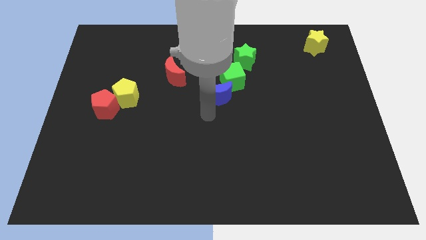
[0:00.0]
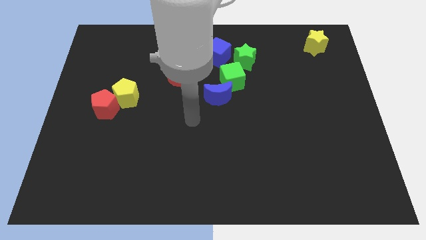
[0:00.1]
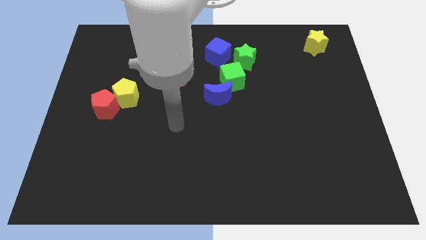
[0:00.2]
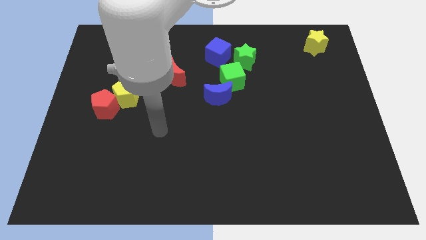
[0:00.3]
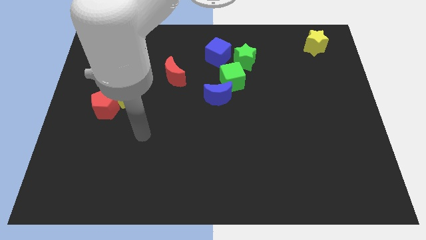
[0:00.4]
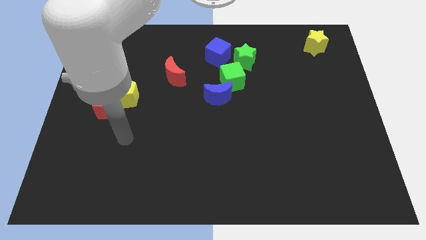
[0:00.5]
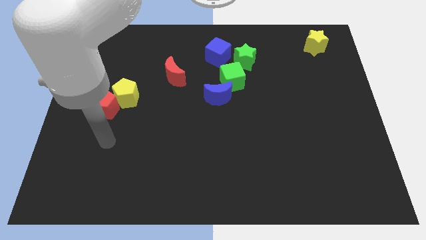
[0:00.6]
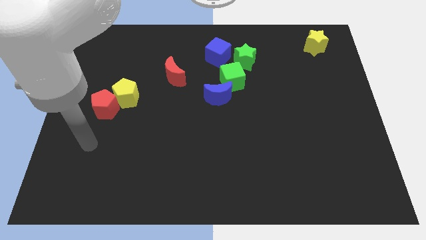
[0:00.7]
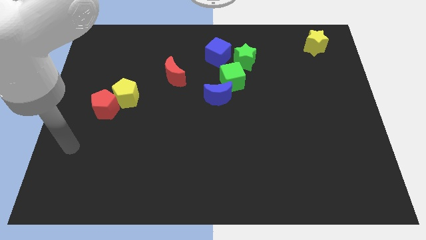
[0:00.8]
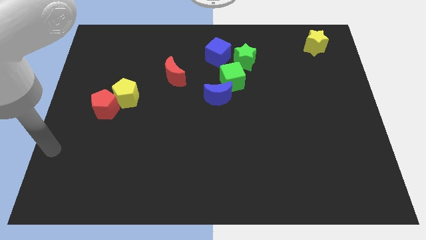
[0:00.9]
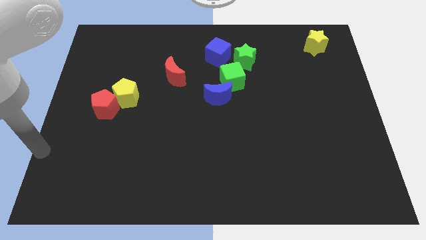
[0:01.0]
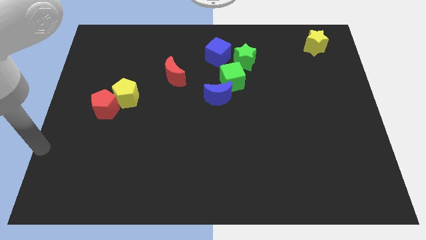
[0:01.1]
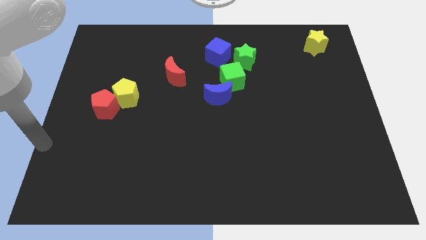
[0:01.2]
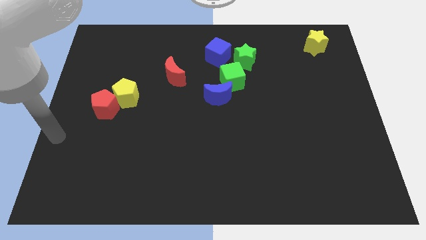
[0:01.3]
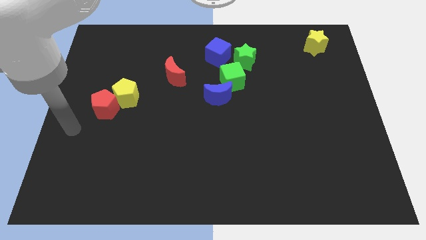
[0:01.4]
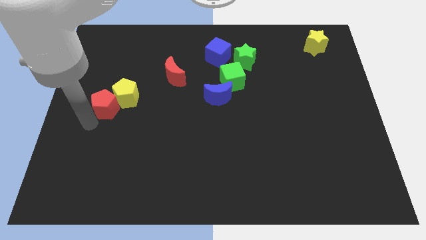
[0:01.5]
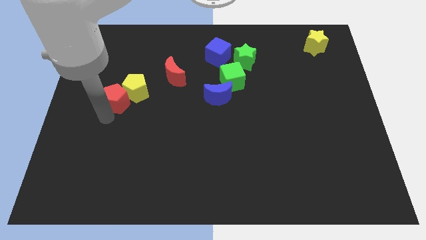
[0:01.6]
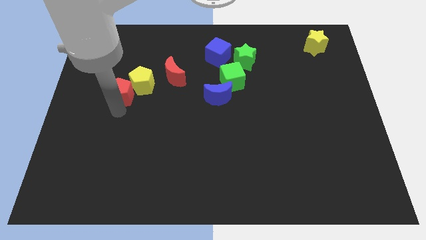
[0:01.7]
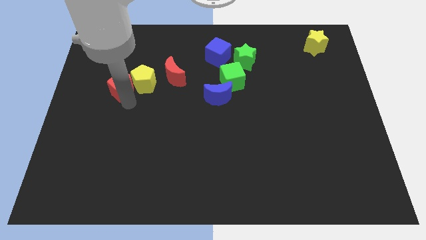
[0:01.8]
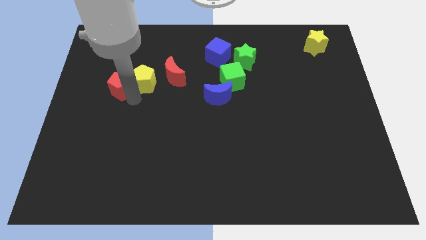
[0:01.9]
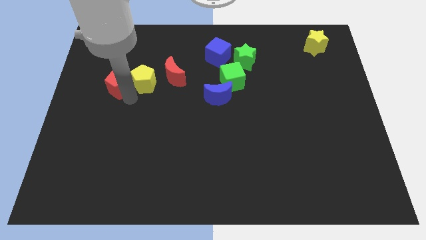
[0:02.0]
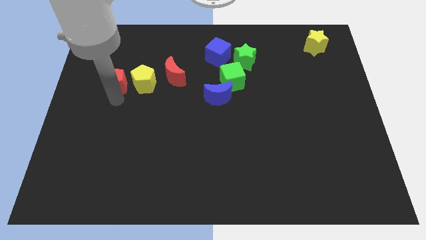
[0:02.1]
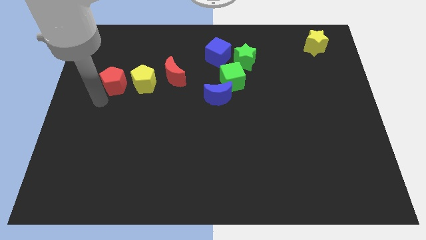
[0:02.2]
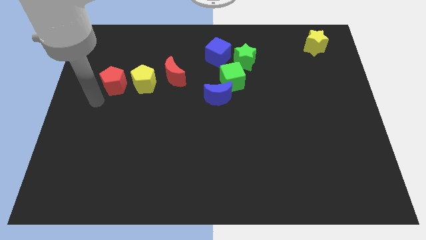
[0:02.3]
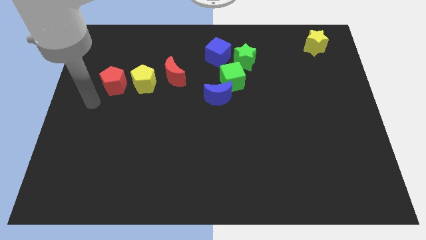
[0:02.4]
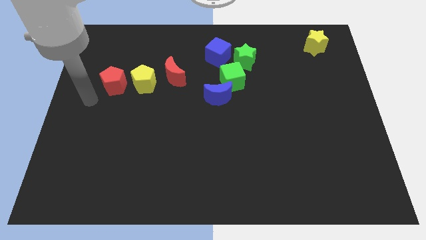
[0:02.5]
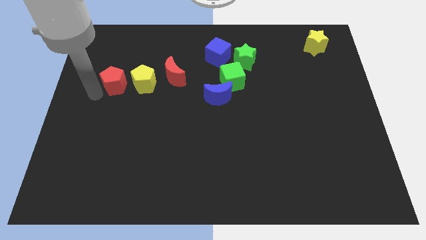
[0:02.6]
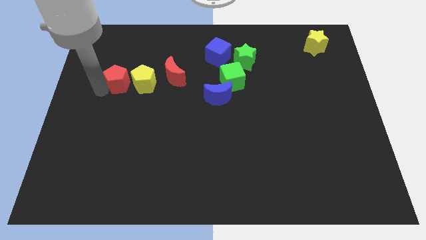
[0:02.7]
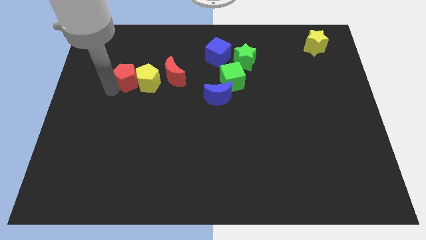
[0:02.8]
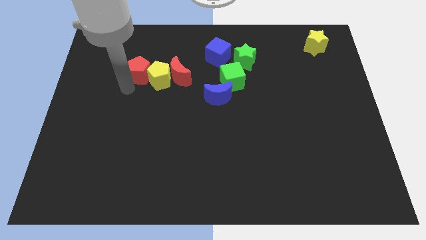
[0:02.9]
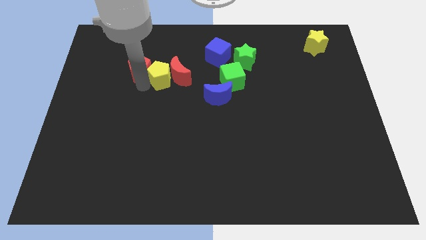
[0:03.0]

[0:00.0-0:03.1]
push the red pentagon into yellow pentagon

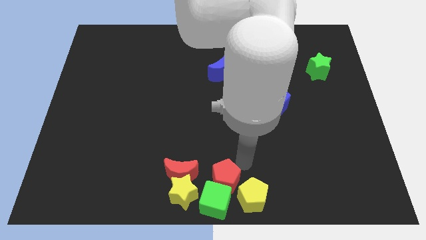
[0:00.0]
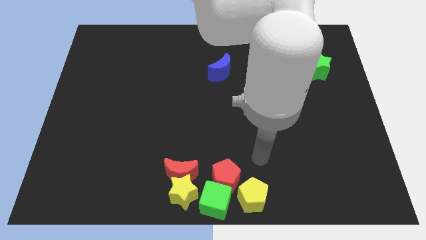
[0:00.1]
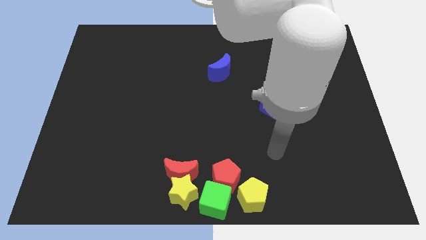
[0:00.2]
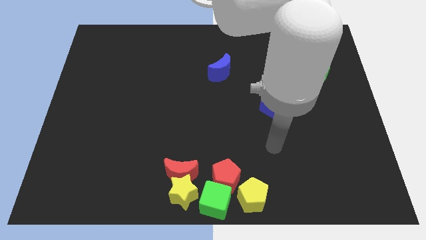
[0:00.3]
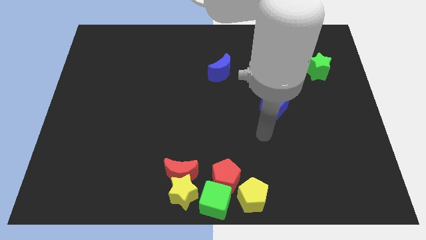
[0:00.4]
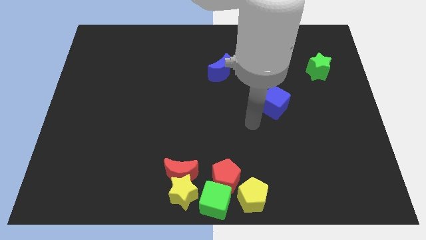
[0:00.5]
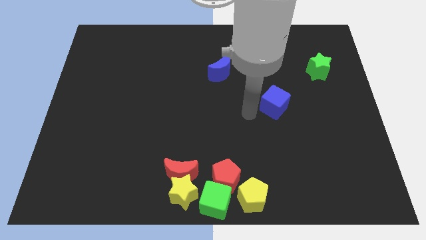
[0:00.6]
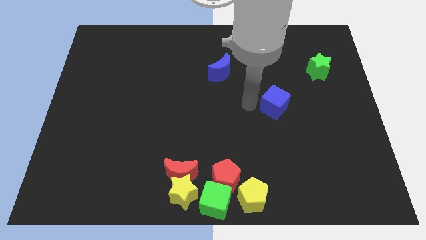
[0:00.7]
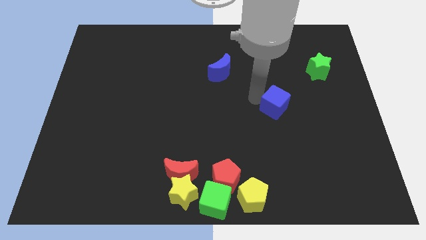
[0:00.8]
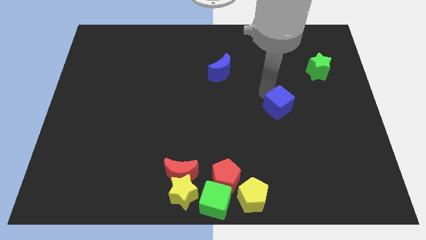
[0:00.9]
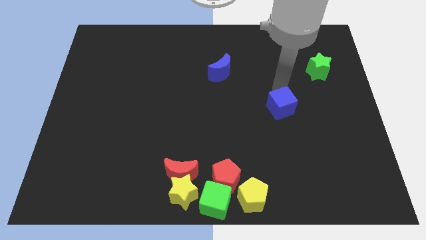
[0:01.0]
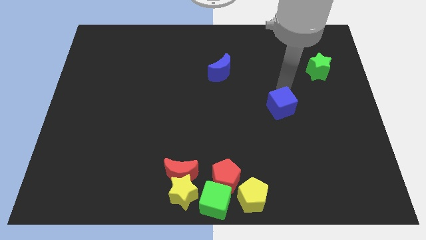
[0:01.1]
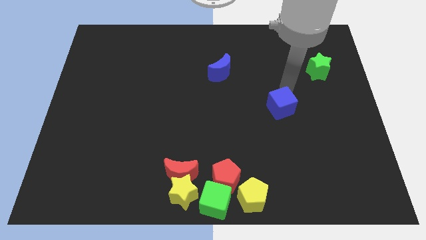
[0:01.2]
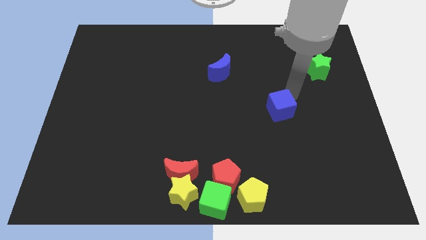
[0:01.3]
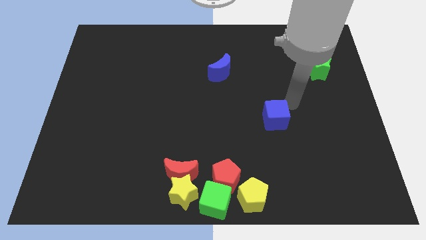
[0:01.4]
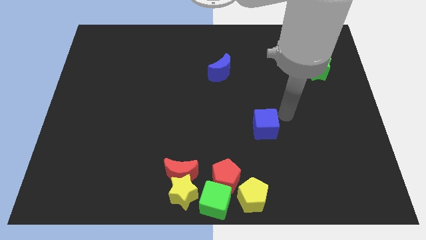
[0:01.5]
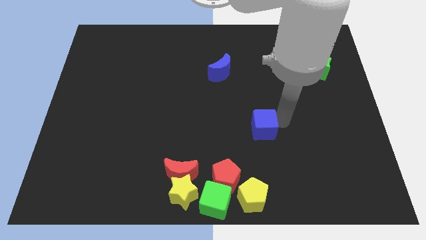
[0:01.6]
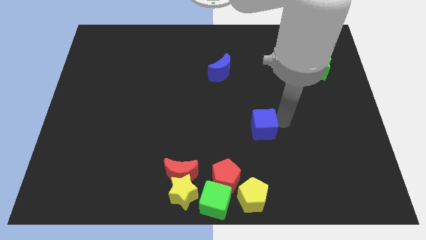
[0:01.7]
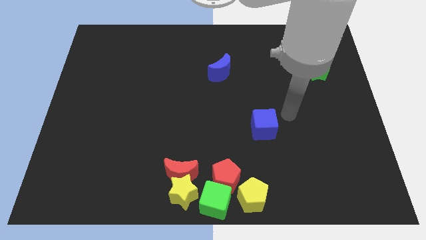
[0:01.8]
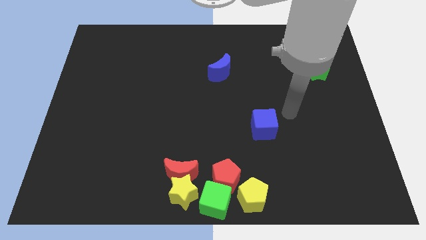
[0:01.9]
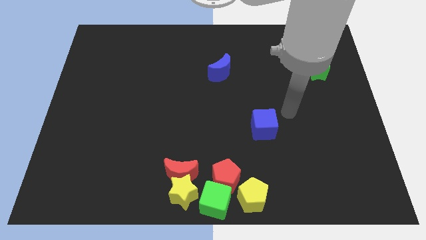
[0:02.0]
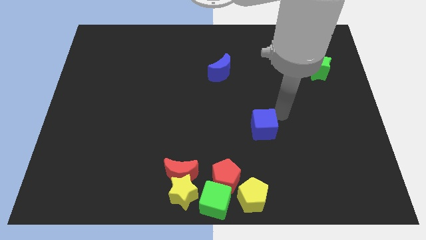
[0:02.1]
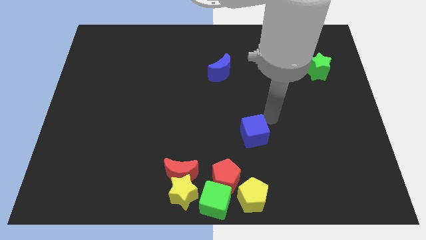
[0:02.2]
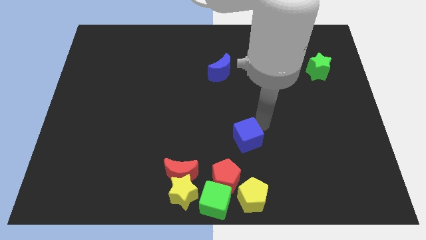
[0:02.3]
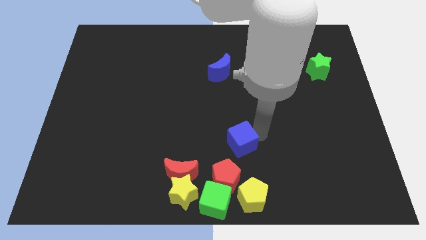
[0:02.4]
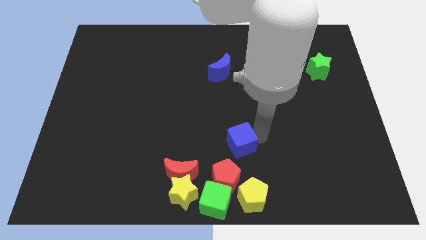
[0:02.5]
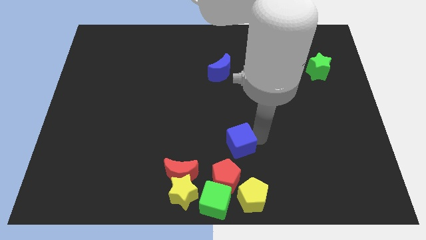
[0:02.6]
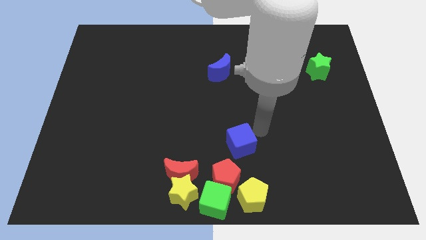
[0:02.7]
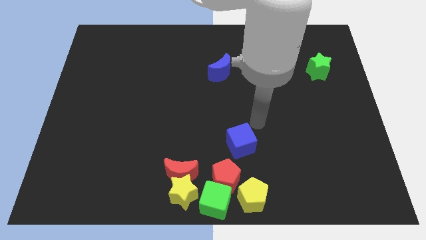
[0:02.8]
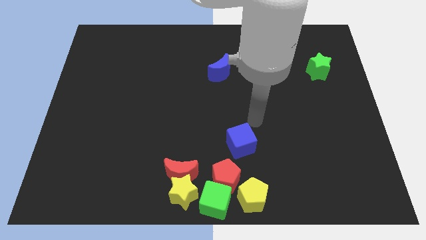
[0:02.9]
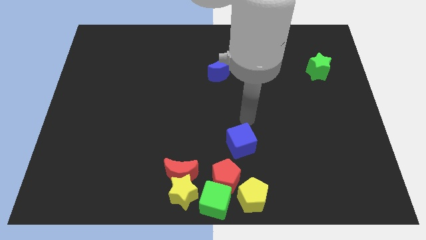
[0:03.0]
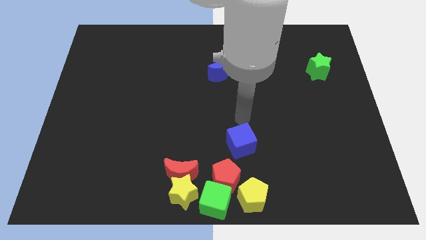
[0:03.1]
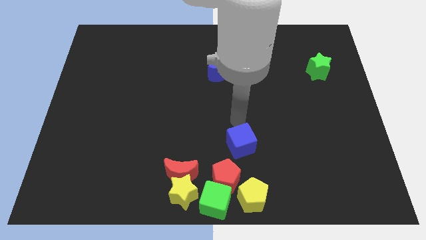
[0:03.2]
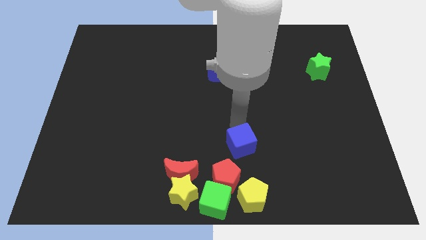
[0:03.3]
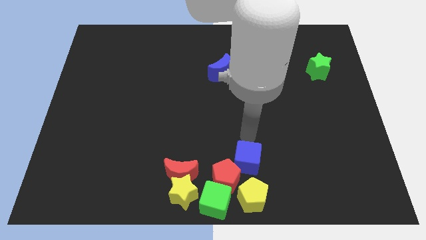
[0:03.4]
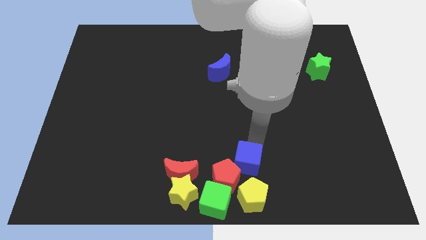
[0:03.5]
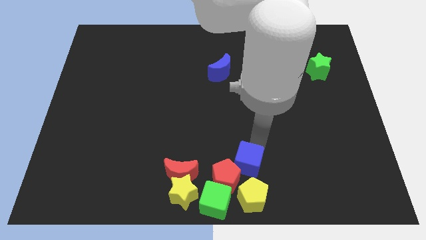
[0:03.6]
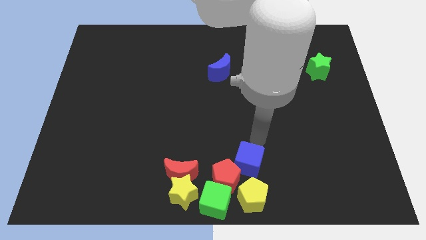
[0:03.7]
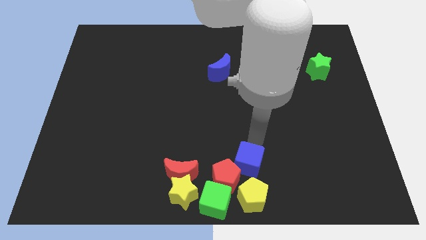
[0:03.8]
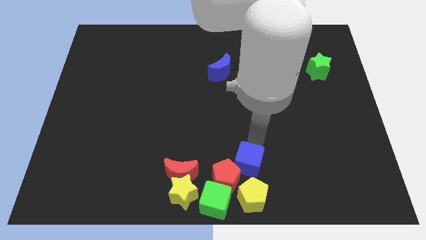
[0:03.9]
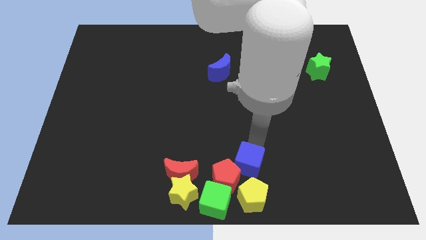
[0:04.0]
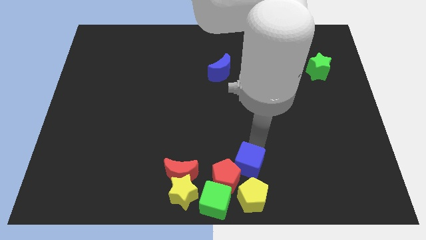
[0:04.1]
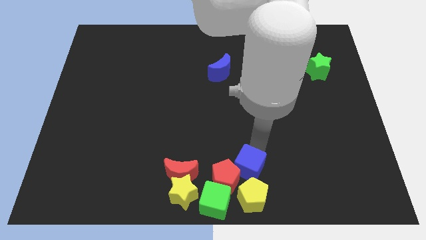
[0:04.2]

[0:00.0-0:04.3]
push the blue cube into top right of the red pentagon

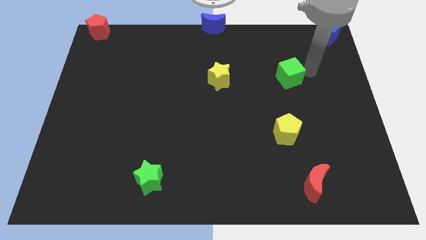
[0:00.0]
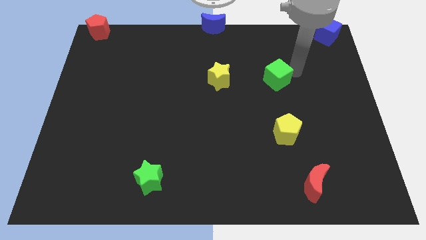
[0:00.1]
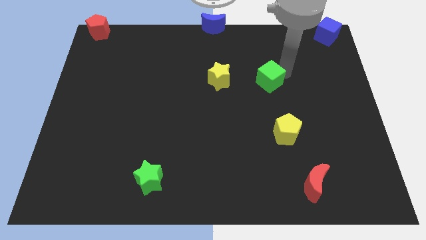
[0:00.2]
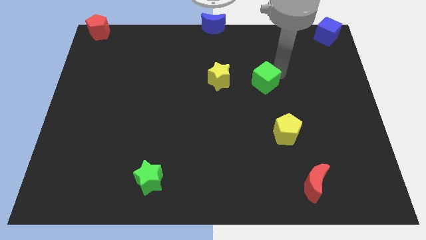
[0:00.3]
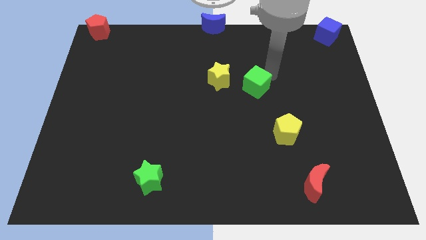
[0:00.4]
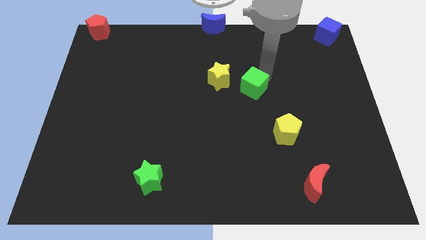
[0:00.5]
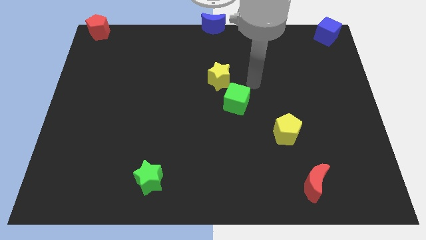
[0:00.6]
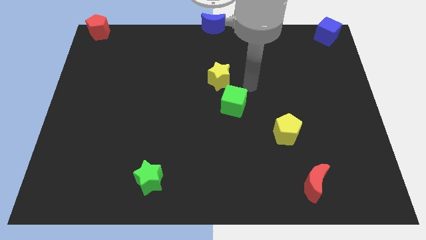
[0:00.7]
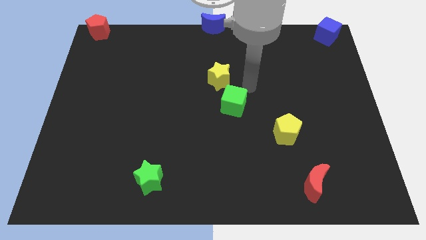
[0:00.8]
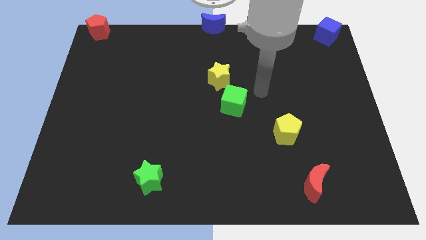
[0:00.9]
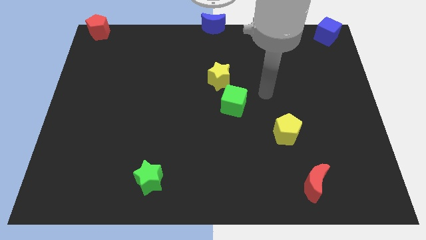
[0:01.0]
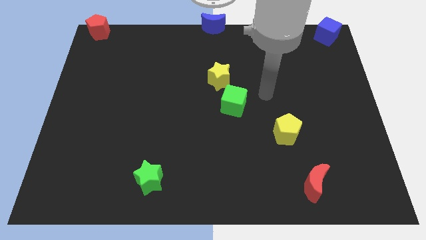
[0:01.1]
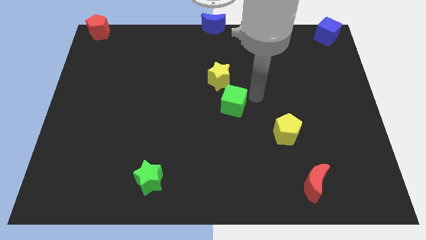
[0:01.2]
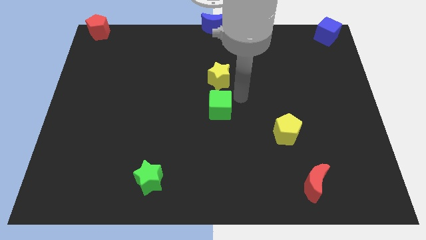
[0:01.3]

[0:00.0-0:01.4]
move the green cube below the yellow star

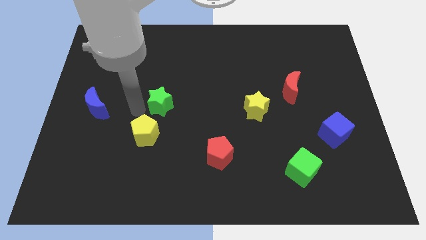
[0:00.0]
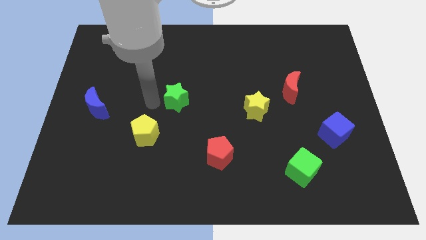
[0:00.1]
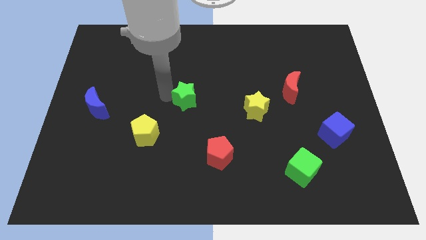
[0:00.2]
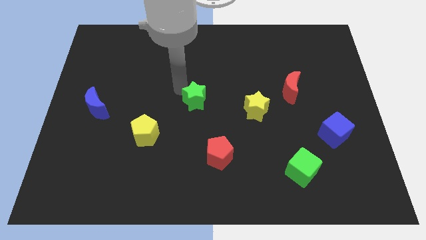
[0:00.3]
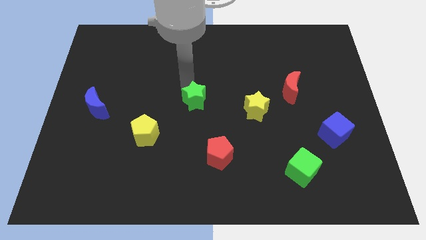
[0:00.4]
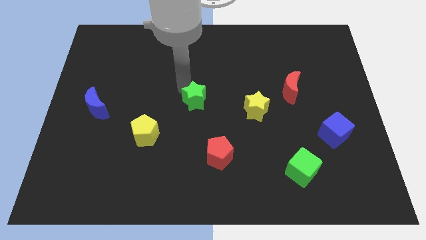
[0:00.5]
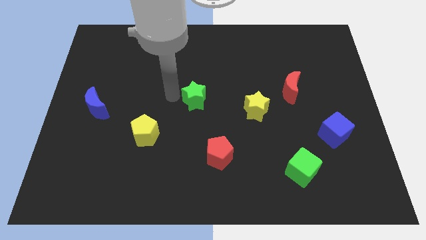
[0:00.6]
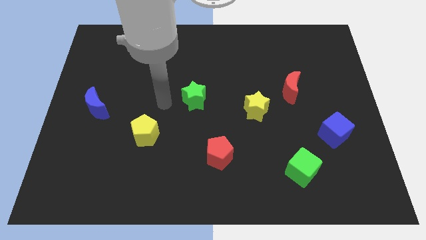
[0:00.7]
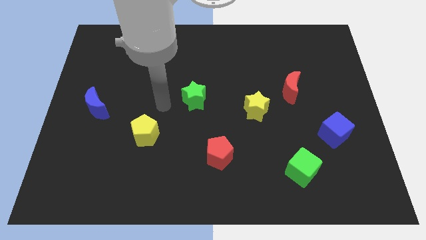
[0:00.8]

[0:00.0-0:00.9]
push the green star to the center of the board
